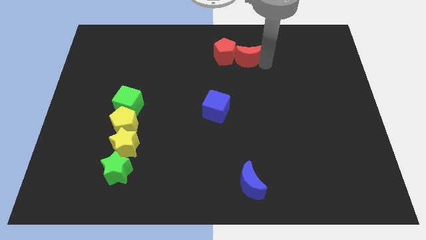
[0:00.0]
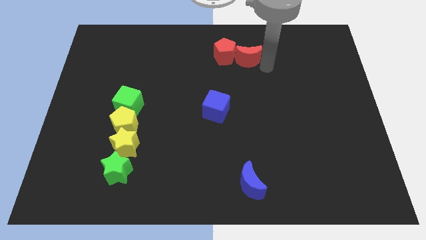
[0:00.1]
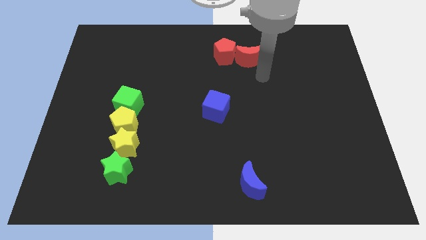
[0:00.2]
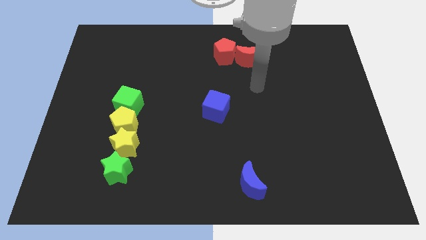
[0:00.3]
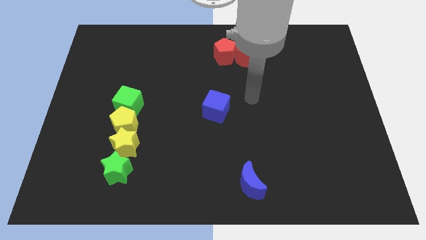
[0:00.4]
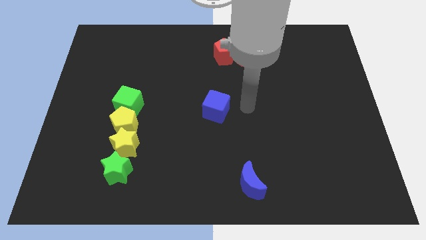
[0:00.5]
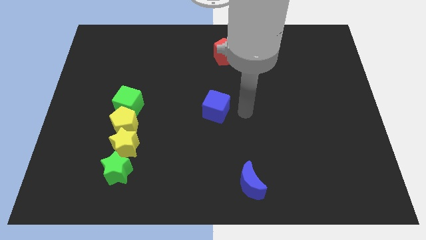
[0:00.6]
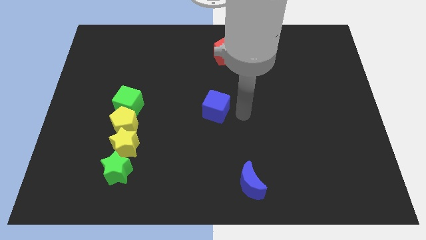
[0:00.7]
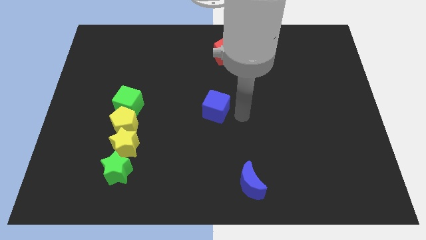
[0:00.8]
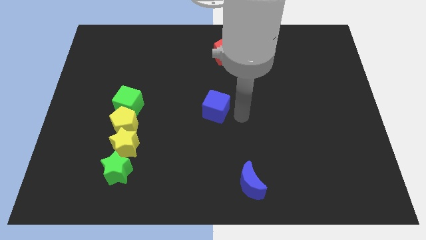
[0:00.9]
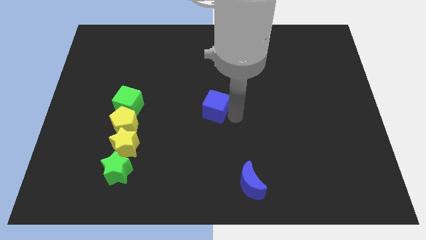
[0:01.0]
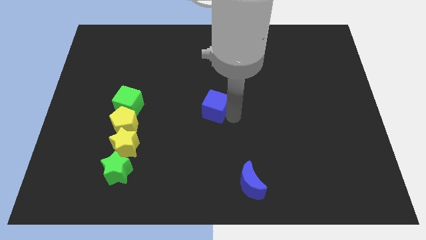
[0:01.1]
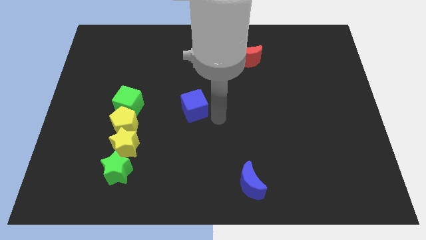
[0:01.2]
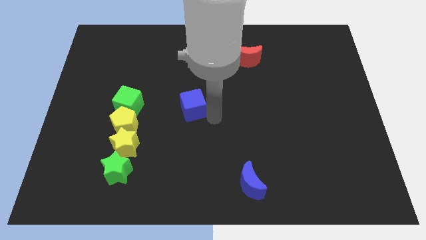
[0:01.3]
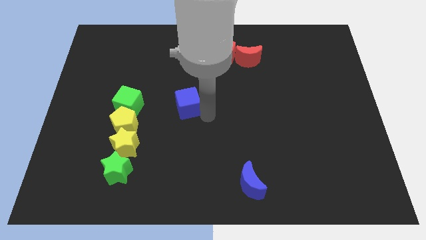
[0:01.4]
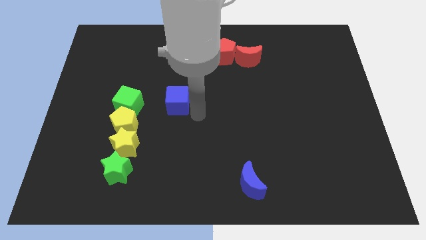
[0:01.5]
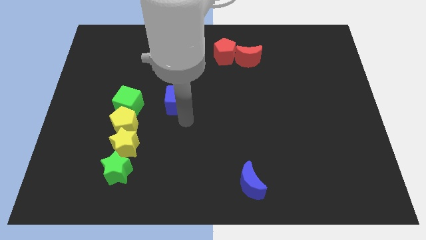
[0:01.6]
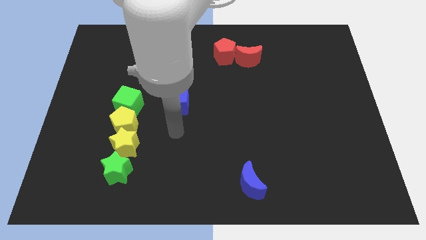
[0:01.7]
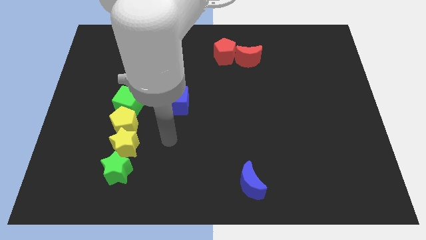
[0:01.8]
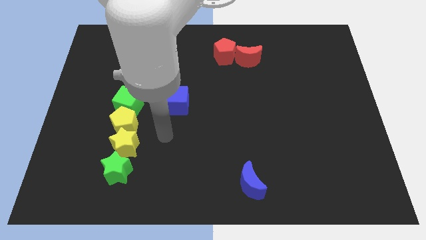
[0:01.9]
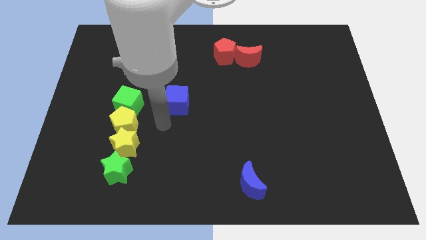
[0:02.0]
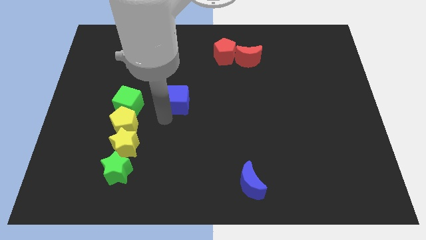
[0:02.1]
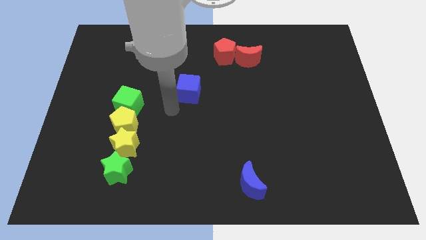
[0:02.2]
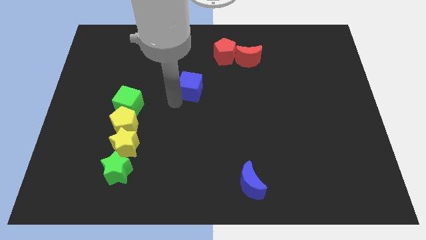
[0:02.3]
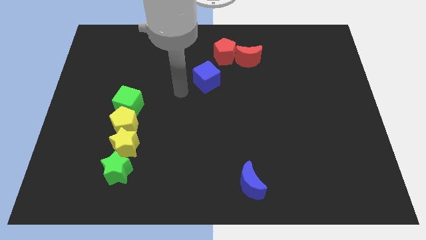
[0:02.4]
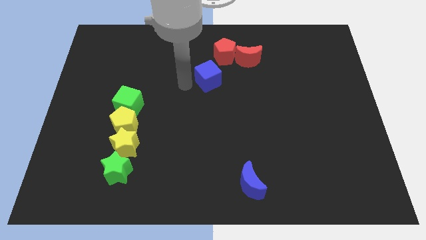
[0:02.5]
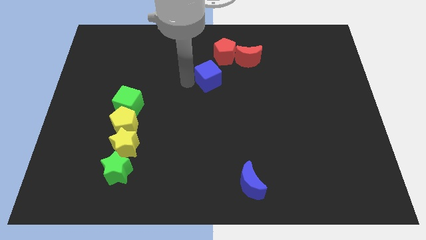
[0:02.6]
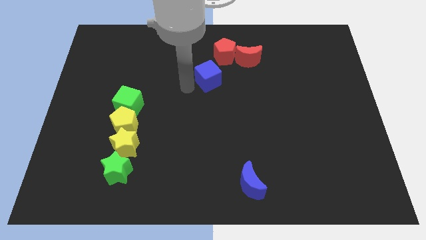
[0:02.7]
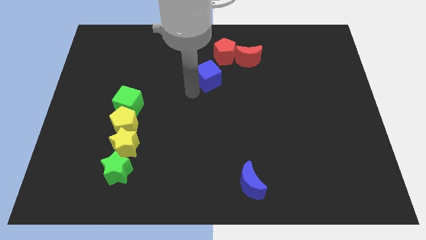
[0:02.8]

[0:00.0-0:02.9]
move the blue cube below the red pentagon

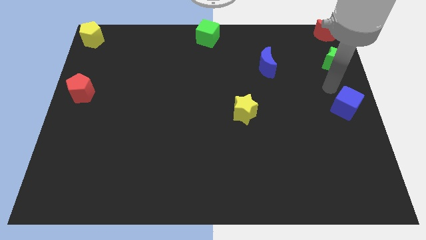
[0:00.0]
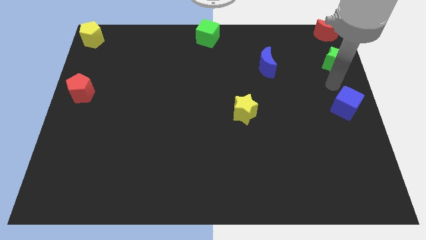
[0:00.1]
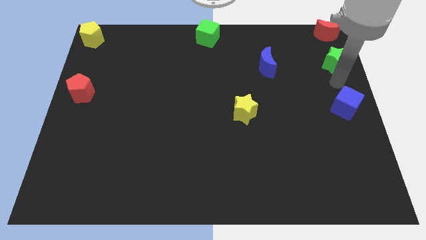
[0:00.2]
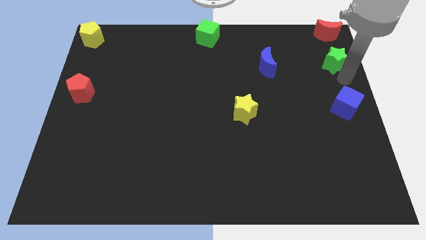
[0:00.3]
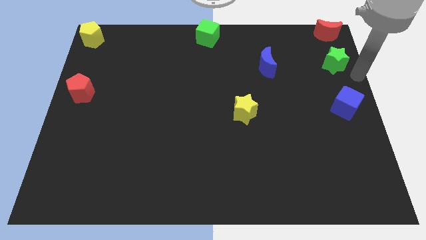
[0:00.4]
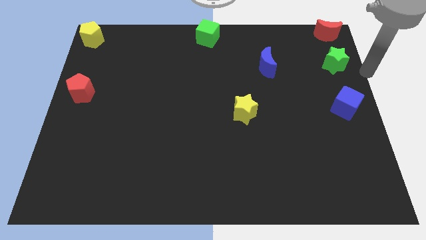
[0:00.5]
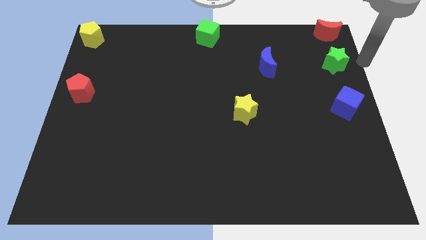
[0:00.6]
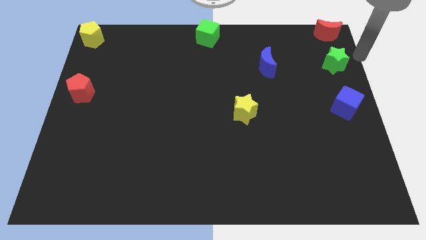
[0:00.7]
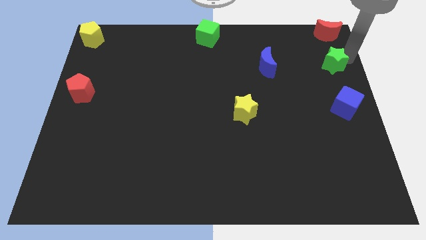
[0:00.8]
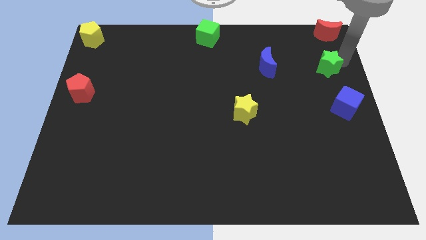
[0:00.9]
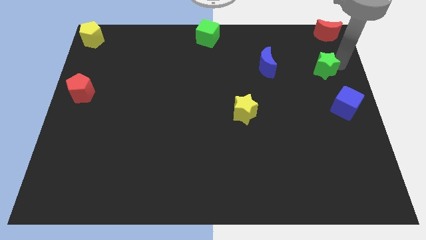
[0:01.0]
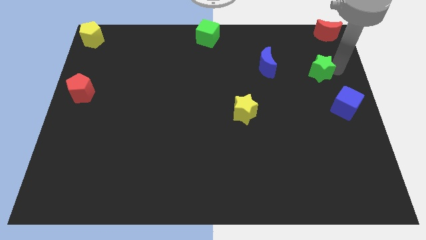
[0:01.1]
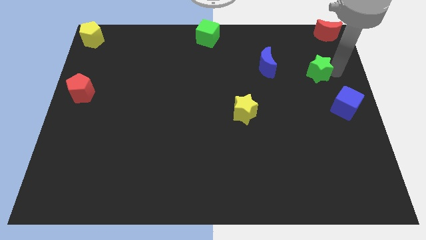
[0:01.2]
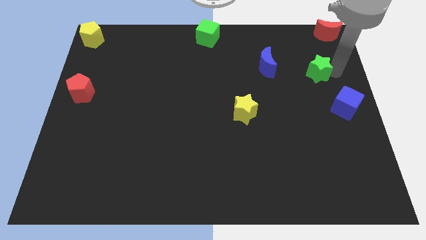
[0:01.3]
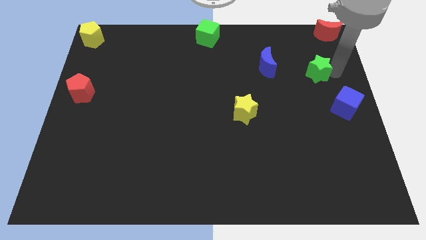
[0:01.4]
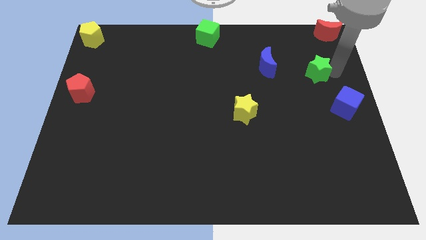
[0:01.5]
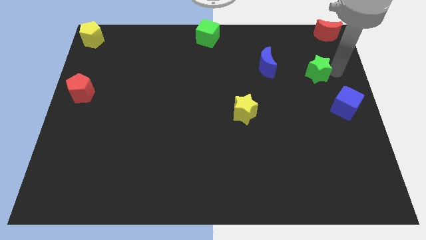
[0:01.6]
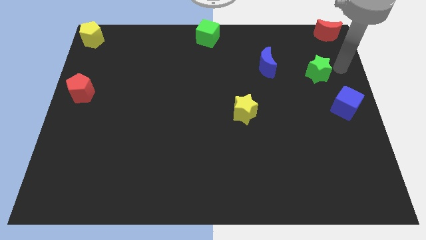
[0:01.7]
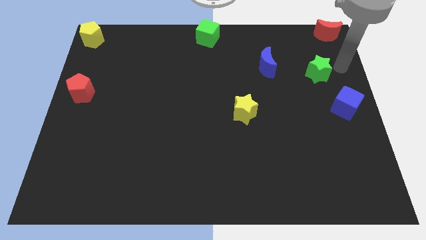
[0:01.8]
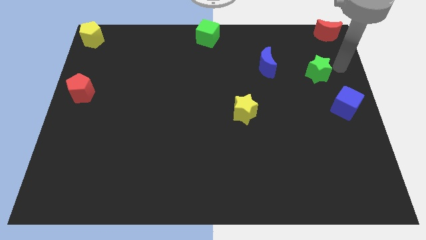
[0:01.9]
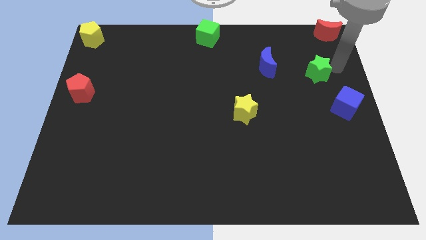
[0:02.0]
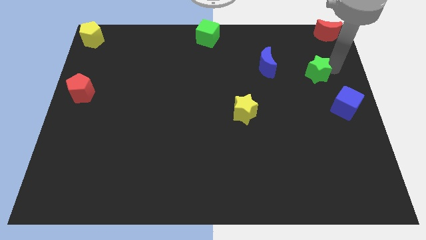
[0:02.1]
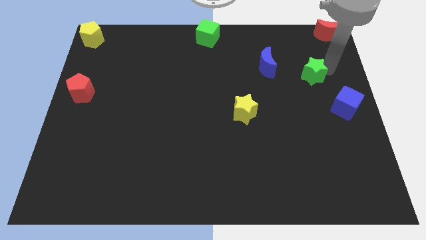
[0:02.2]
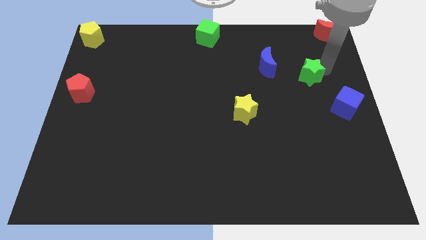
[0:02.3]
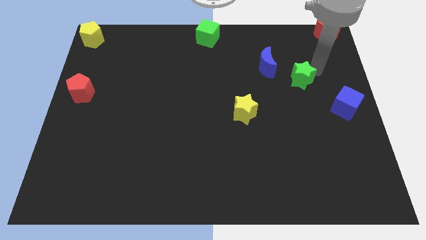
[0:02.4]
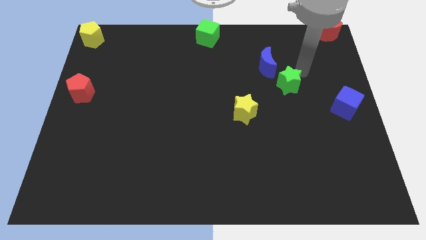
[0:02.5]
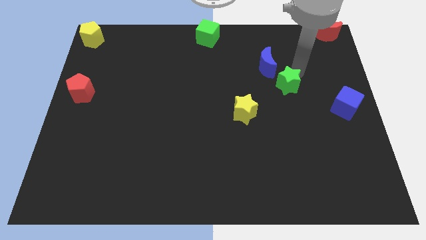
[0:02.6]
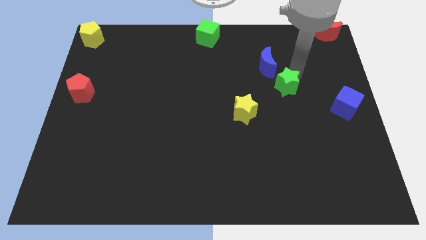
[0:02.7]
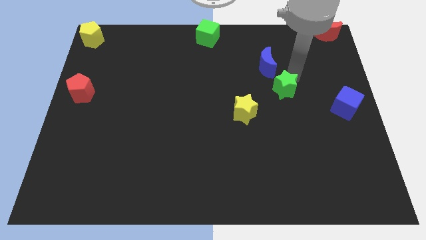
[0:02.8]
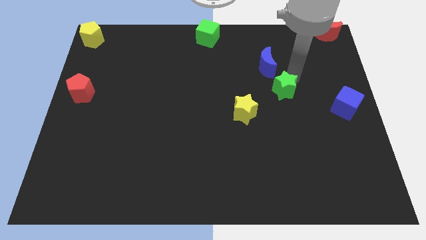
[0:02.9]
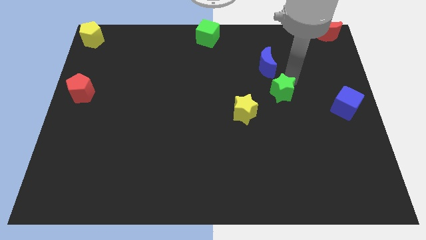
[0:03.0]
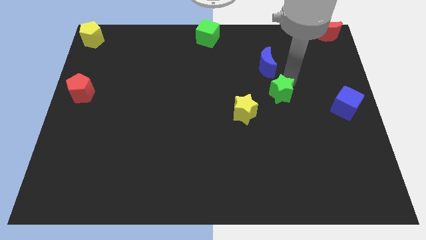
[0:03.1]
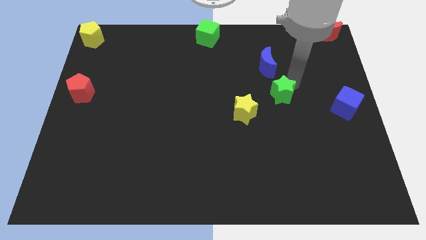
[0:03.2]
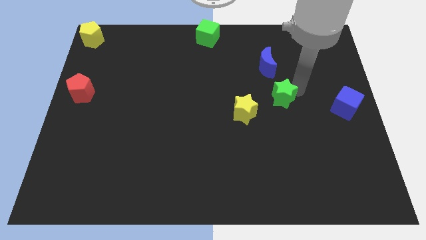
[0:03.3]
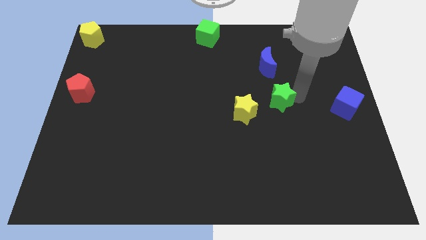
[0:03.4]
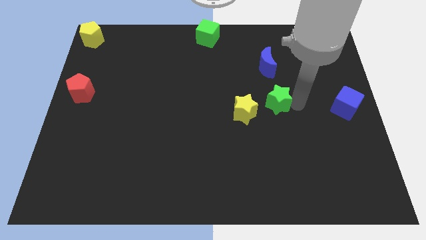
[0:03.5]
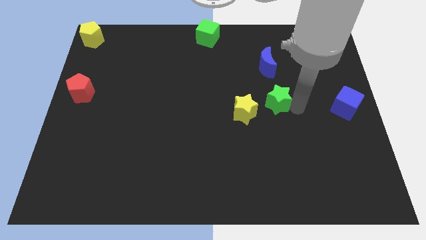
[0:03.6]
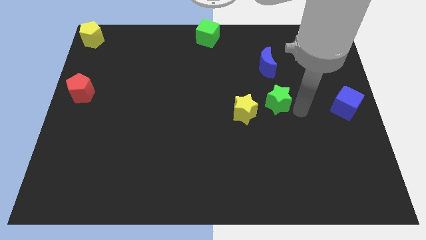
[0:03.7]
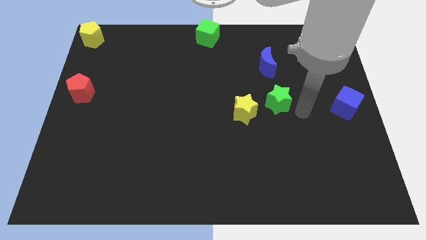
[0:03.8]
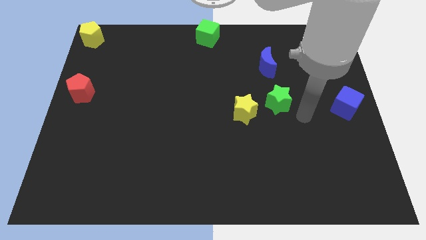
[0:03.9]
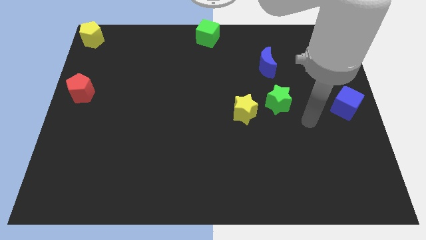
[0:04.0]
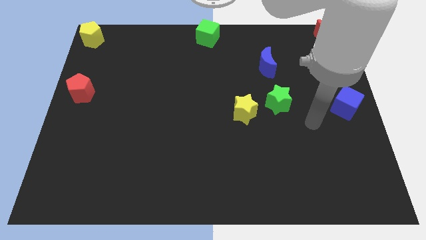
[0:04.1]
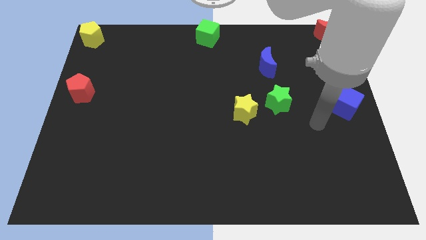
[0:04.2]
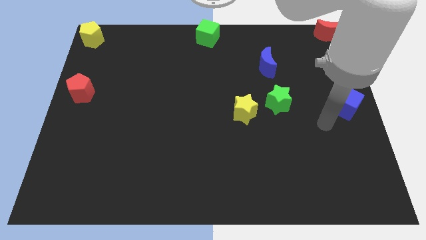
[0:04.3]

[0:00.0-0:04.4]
move the green star below the blue crescent

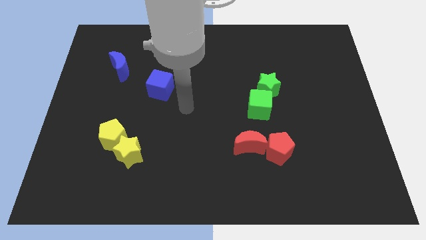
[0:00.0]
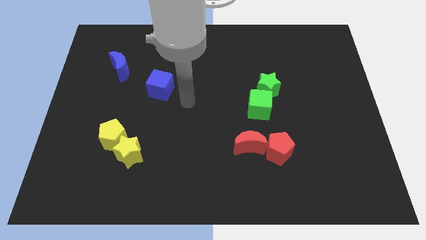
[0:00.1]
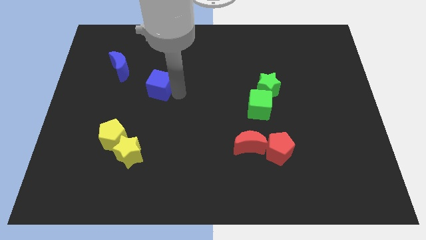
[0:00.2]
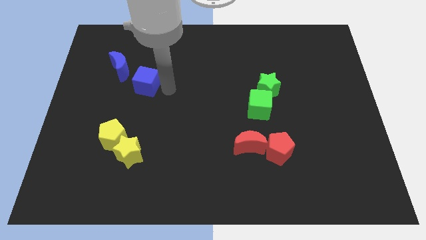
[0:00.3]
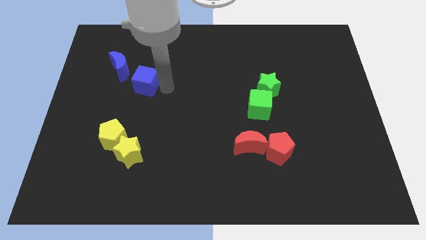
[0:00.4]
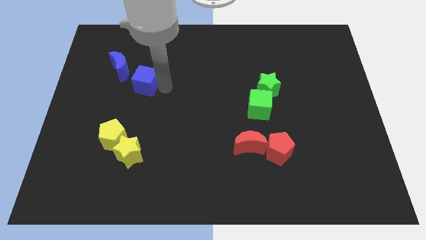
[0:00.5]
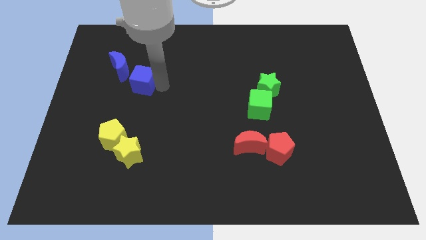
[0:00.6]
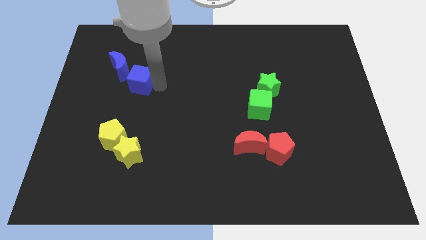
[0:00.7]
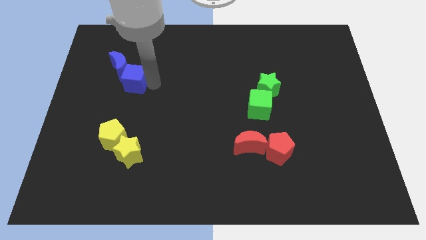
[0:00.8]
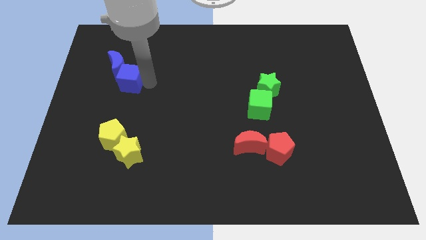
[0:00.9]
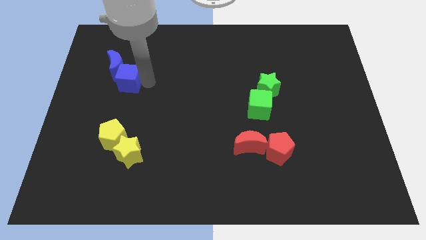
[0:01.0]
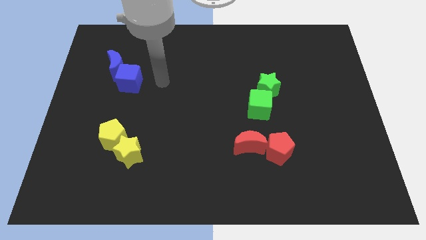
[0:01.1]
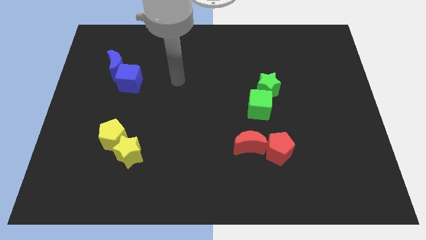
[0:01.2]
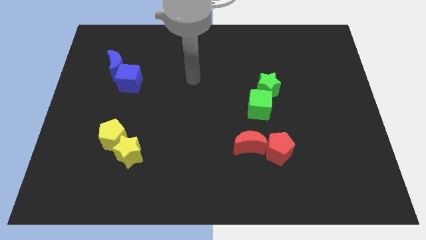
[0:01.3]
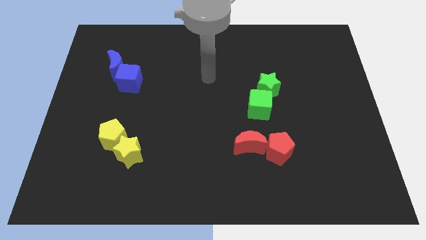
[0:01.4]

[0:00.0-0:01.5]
push the blue cube into the blue moon

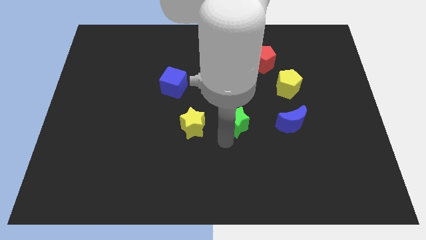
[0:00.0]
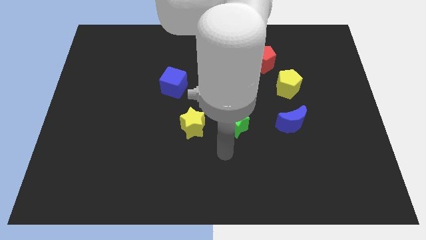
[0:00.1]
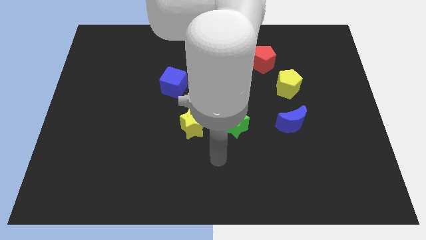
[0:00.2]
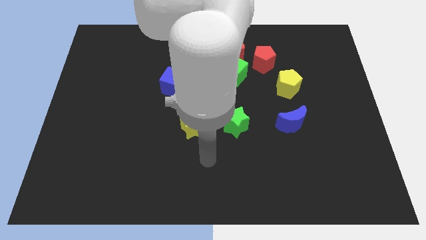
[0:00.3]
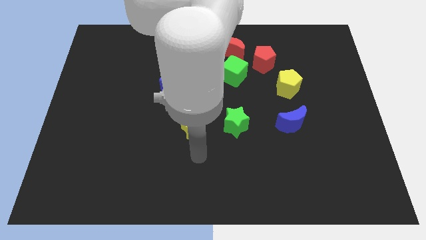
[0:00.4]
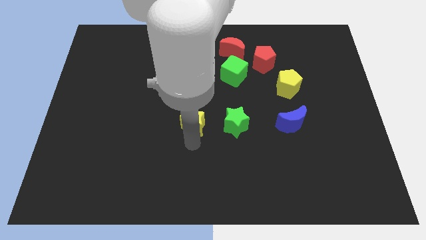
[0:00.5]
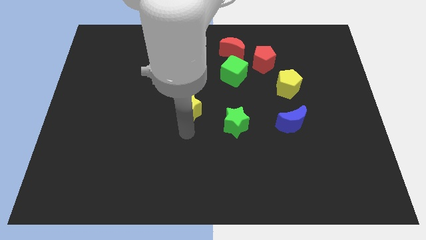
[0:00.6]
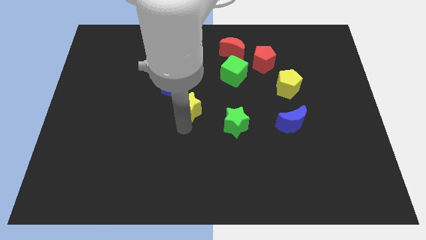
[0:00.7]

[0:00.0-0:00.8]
move the yellow star slightly to the top
